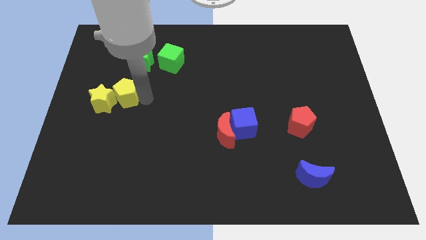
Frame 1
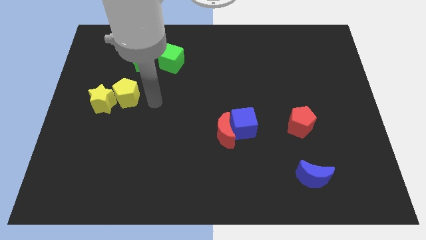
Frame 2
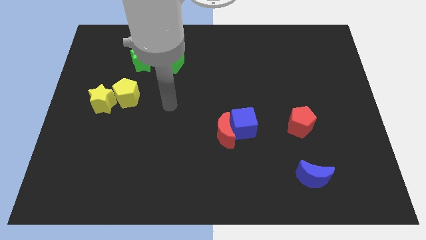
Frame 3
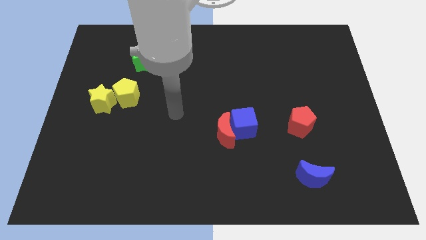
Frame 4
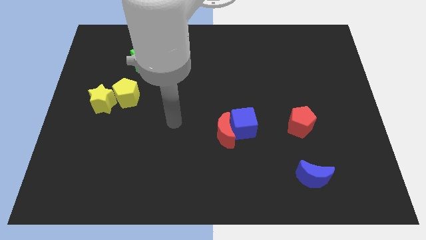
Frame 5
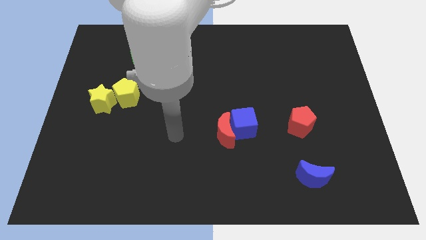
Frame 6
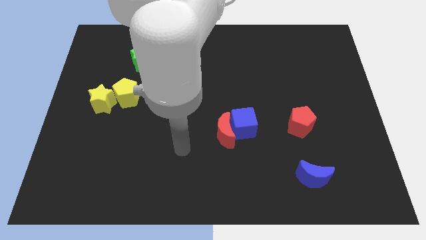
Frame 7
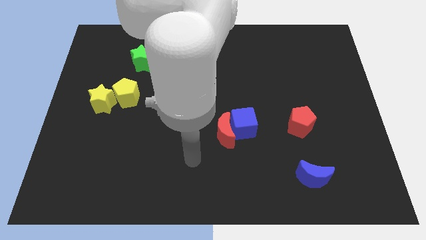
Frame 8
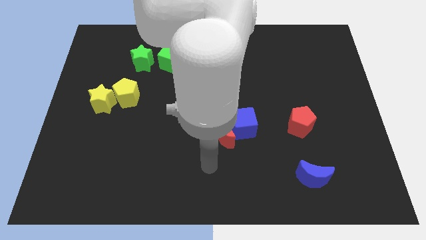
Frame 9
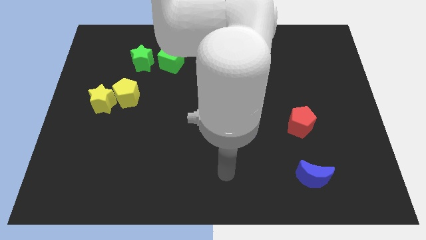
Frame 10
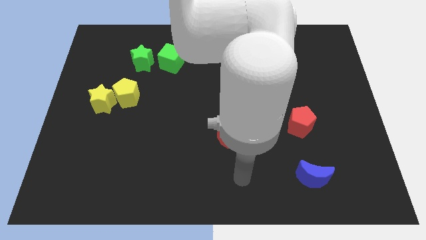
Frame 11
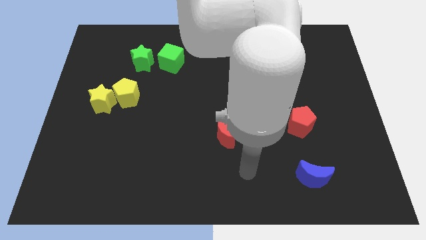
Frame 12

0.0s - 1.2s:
move your arm away from the yellow pentagon

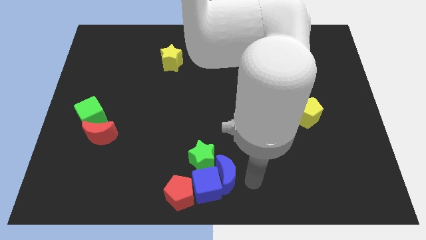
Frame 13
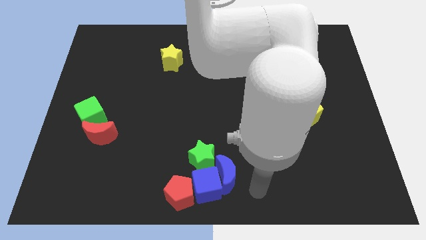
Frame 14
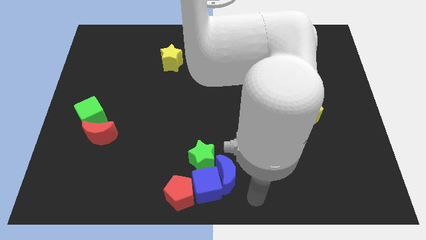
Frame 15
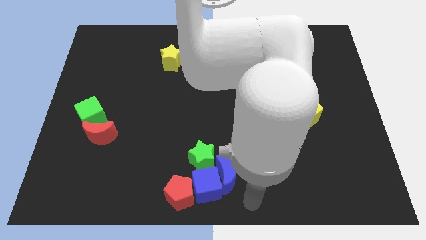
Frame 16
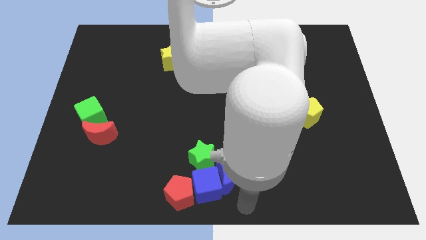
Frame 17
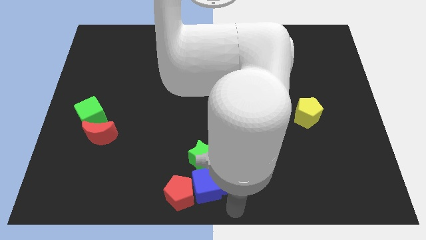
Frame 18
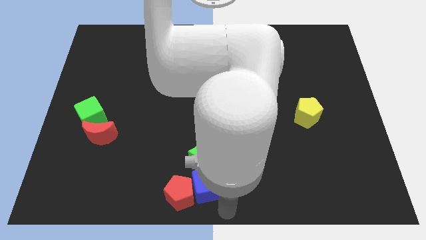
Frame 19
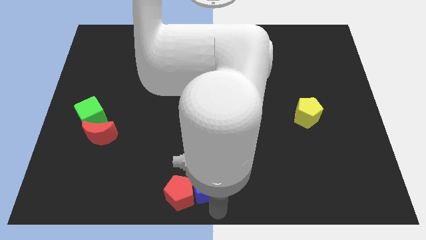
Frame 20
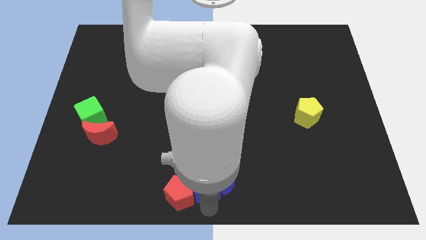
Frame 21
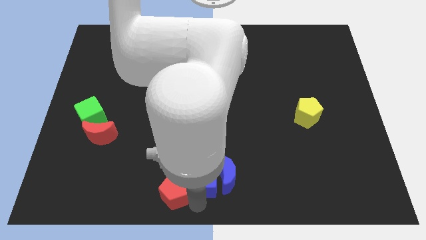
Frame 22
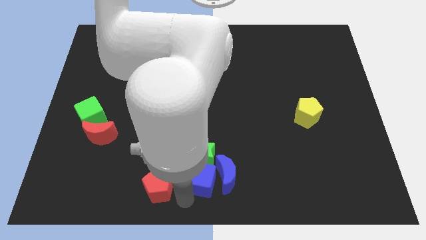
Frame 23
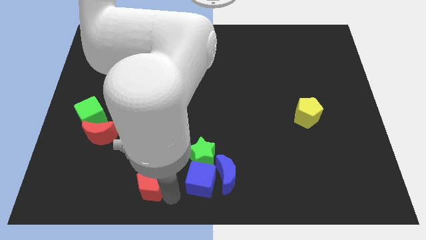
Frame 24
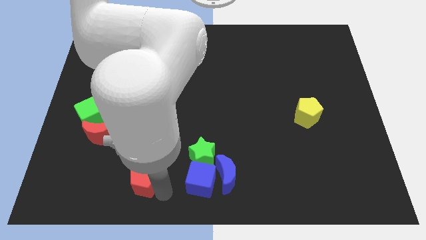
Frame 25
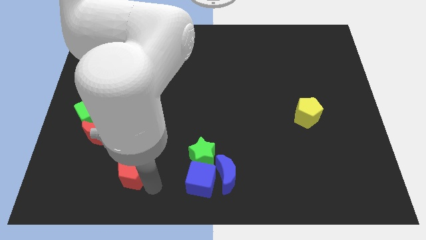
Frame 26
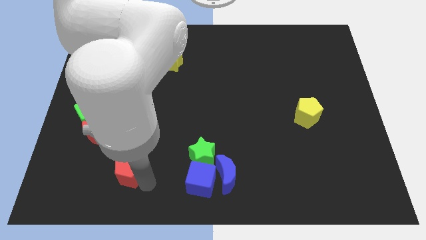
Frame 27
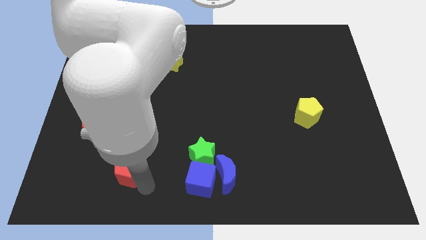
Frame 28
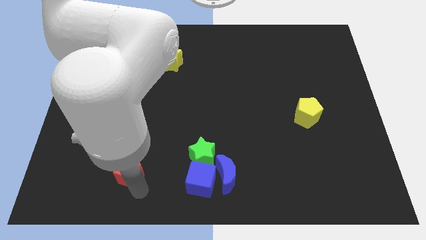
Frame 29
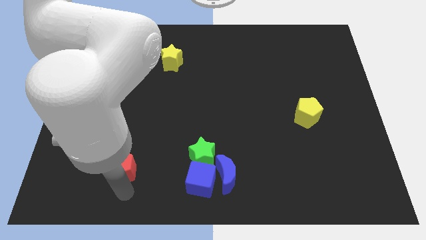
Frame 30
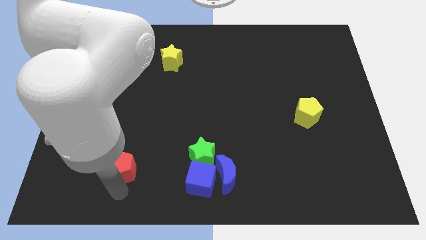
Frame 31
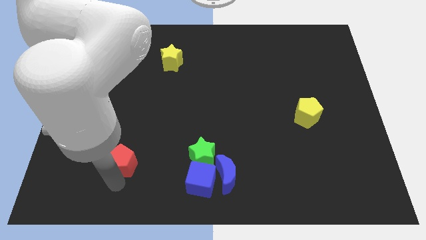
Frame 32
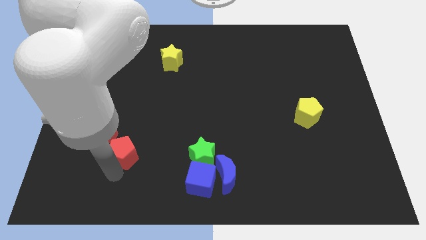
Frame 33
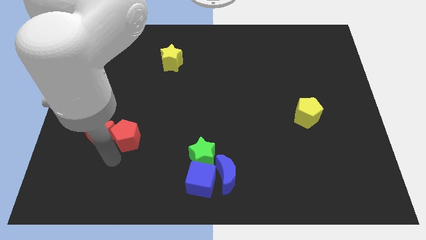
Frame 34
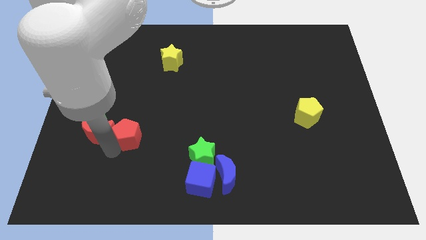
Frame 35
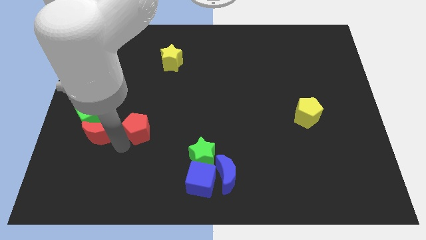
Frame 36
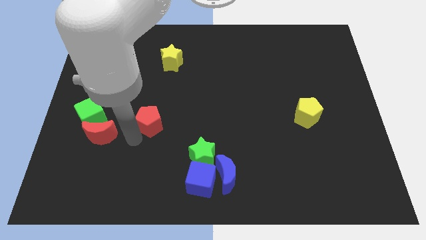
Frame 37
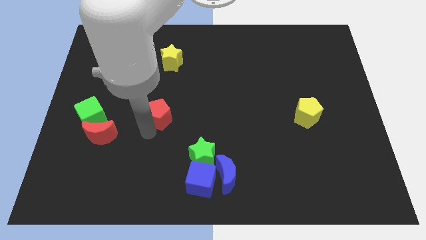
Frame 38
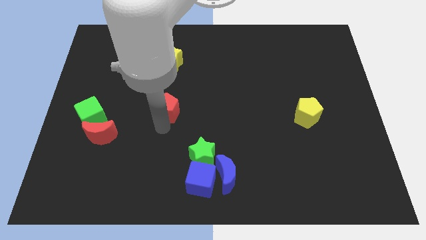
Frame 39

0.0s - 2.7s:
move the red pentagon vertical right to the red crescent

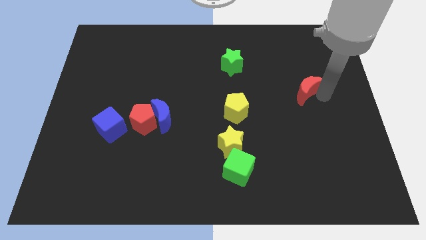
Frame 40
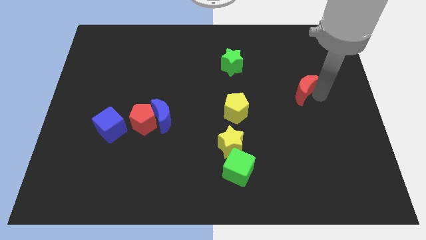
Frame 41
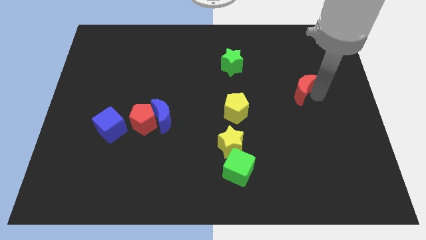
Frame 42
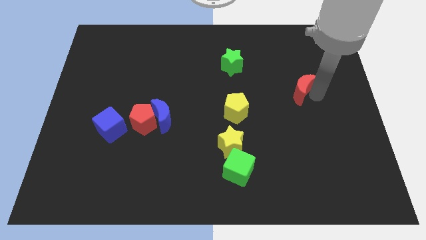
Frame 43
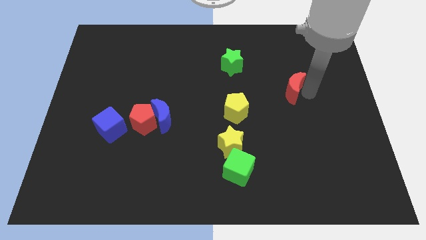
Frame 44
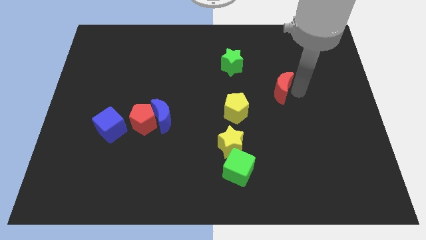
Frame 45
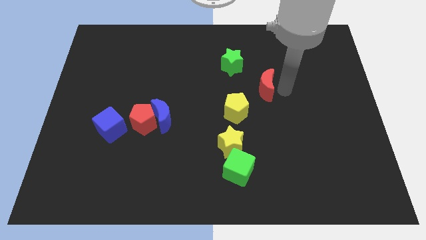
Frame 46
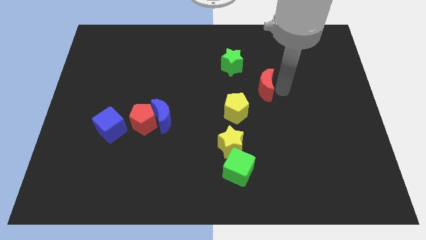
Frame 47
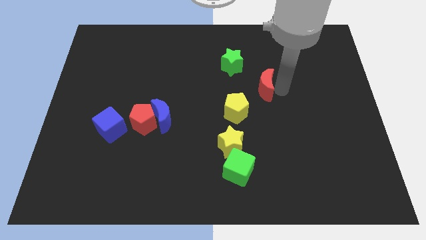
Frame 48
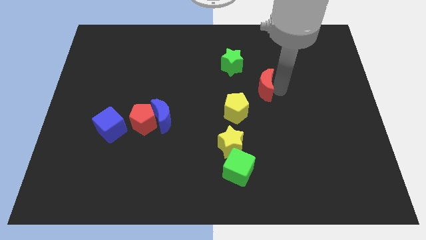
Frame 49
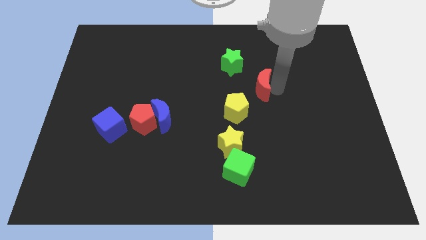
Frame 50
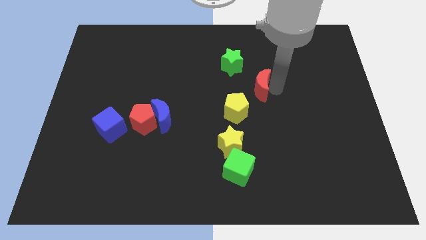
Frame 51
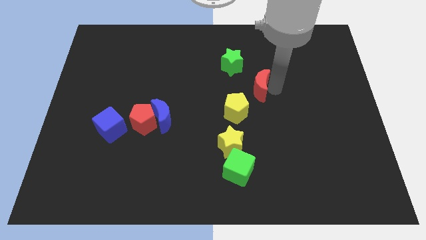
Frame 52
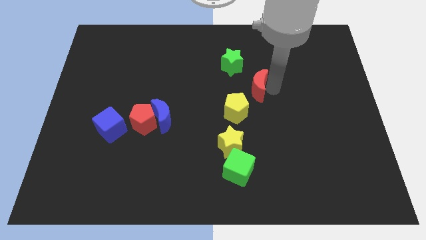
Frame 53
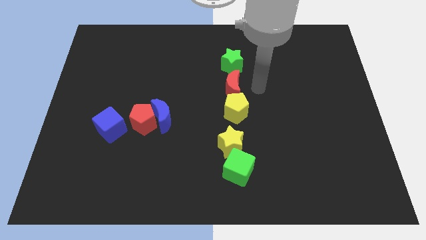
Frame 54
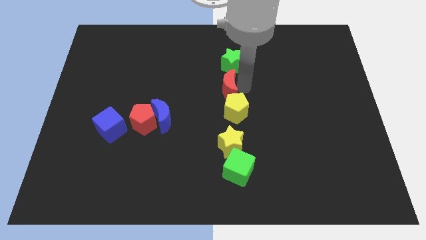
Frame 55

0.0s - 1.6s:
put the red crescent between the green star and yellow pentagon

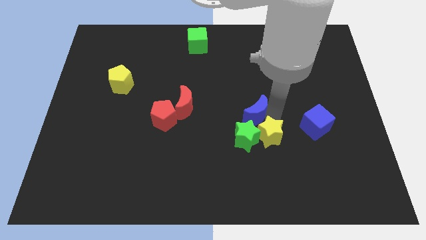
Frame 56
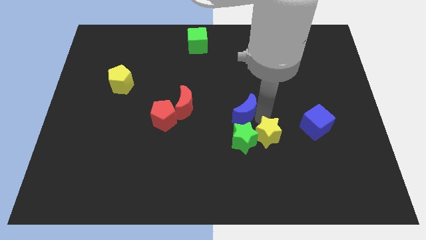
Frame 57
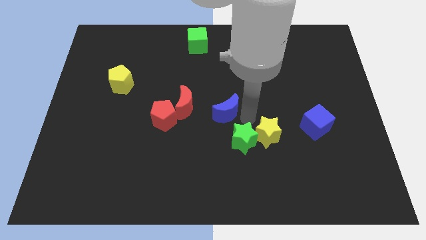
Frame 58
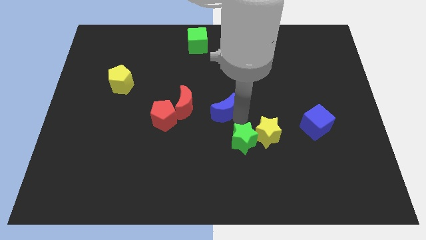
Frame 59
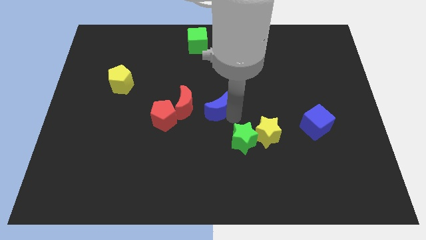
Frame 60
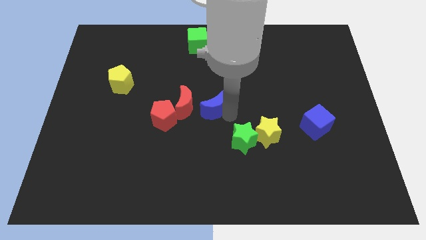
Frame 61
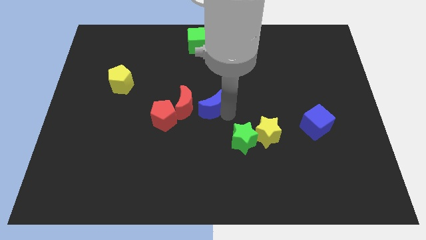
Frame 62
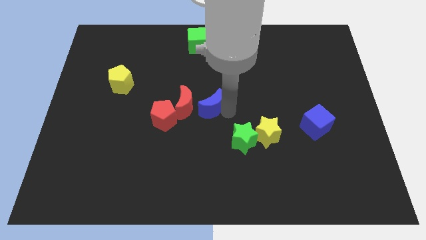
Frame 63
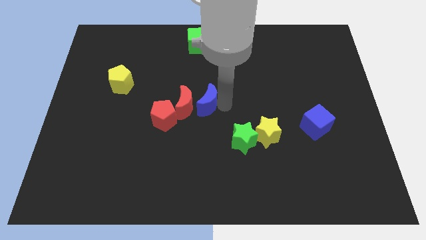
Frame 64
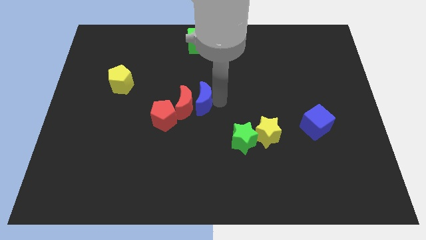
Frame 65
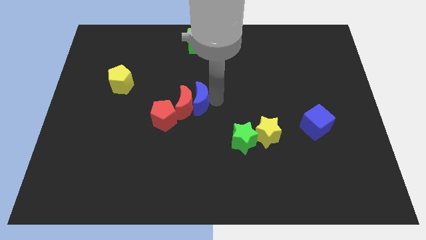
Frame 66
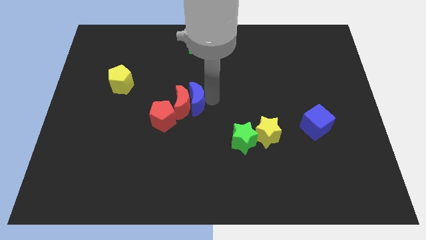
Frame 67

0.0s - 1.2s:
push the blue crescent into red crescent

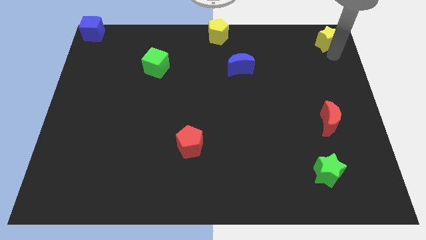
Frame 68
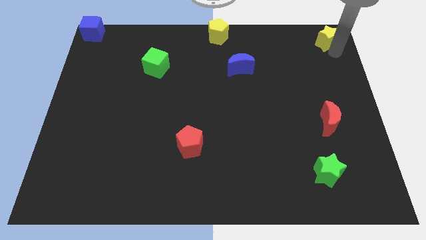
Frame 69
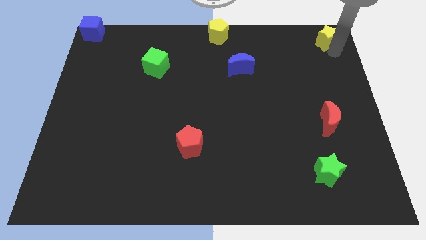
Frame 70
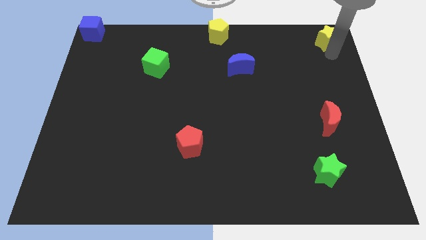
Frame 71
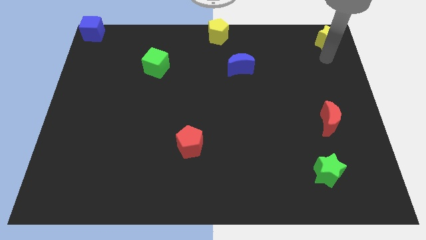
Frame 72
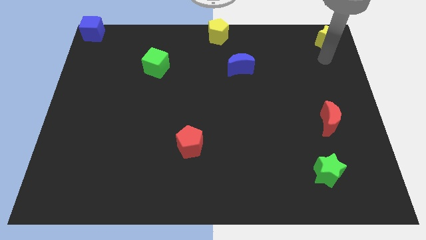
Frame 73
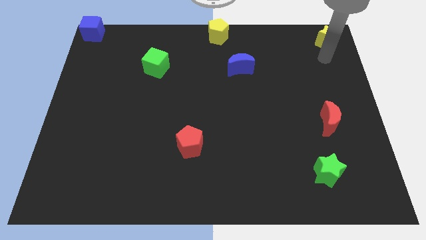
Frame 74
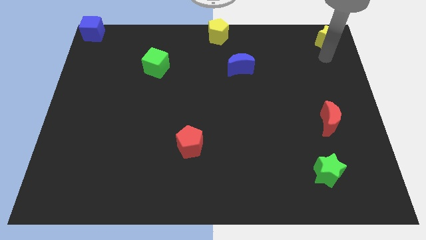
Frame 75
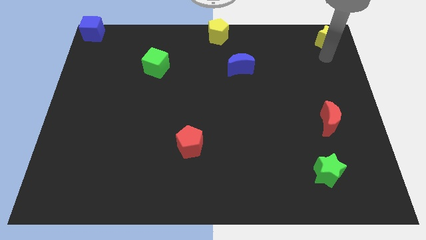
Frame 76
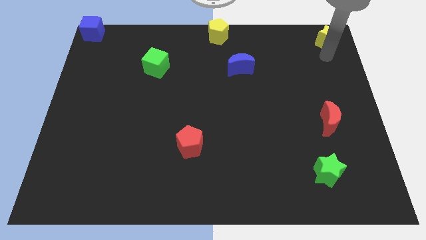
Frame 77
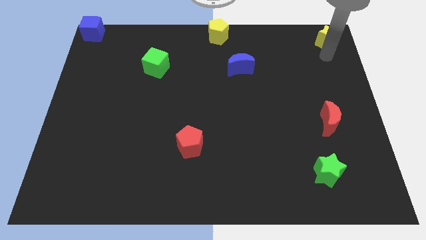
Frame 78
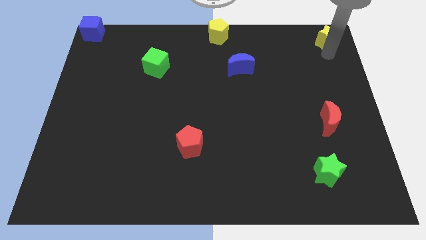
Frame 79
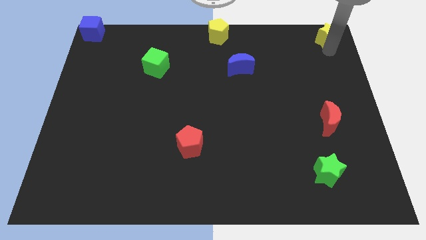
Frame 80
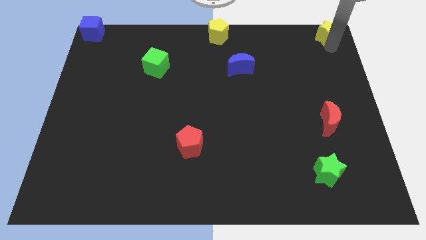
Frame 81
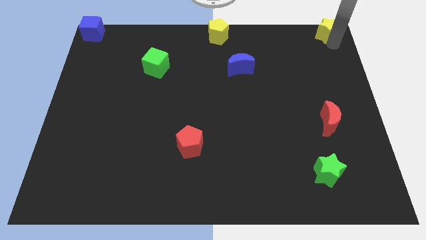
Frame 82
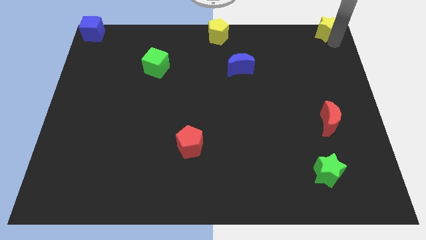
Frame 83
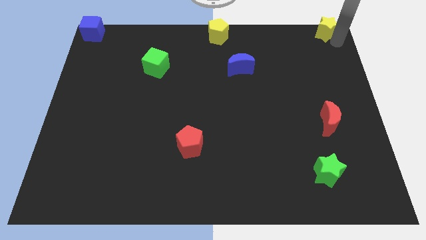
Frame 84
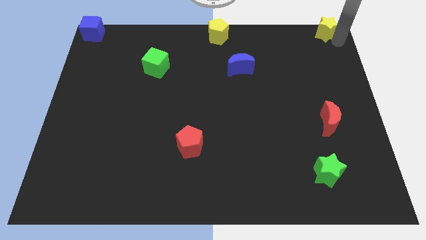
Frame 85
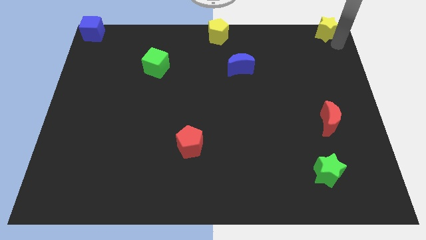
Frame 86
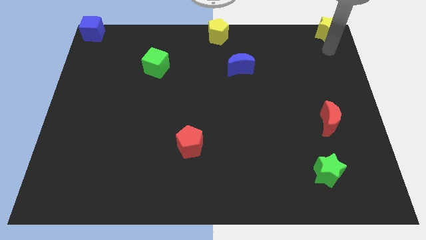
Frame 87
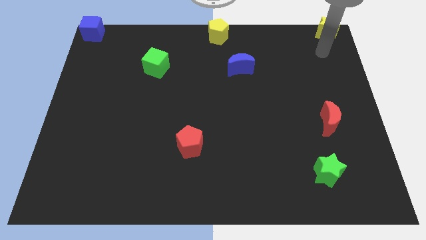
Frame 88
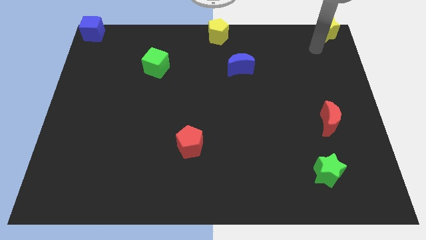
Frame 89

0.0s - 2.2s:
place the yellow star at the top right corner of the board
